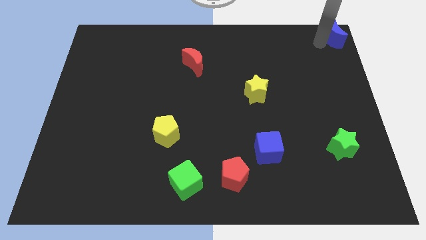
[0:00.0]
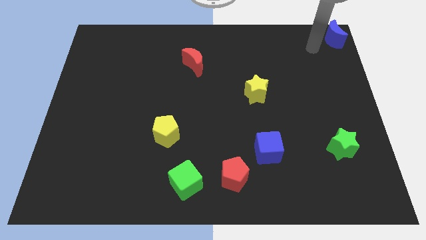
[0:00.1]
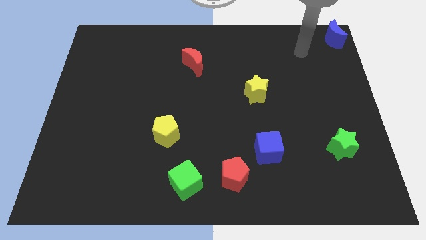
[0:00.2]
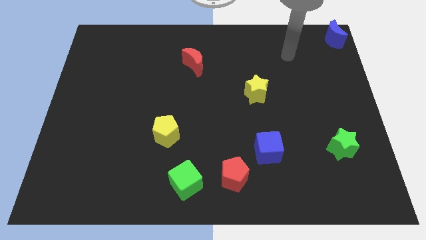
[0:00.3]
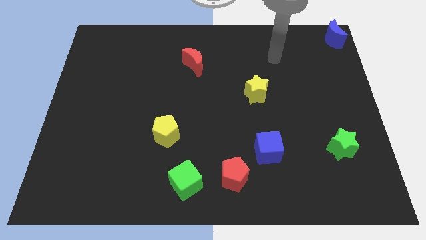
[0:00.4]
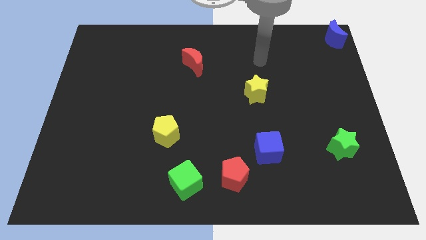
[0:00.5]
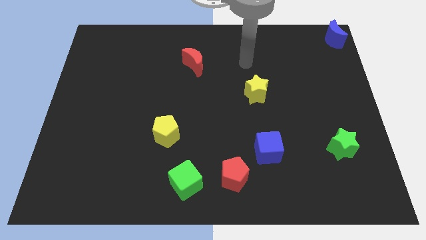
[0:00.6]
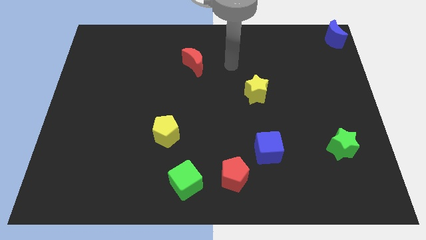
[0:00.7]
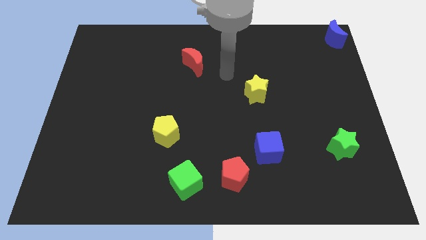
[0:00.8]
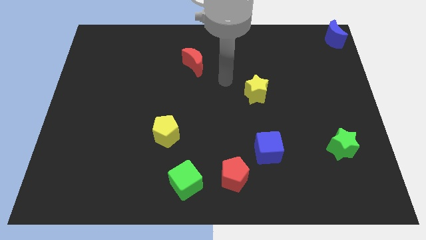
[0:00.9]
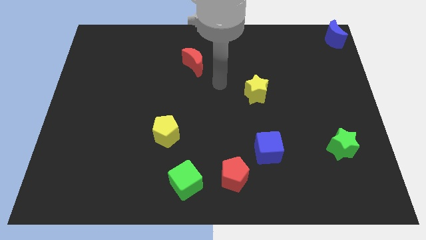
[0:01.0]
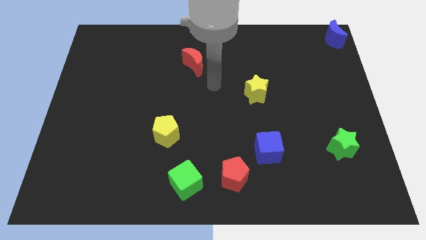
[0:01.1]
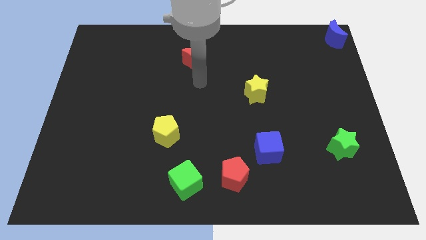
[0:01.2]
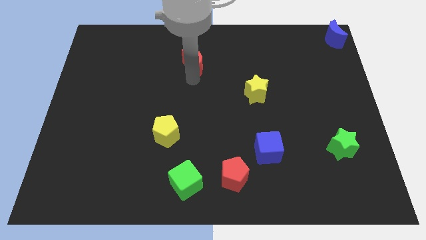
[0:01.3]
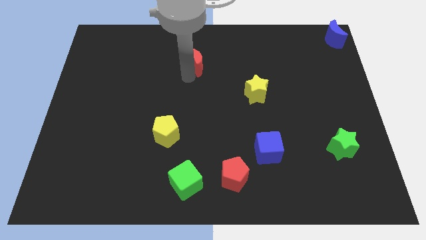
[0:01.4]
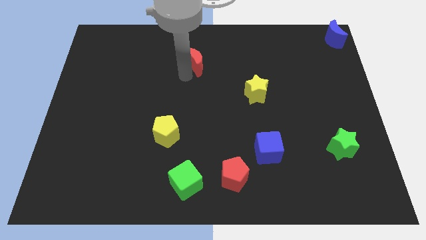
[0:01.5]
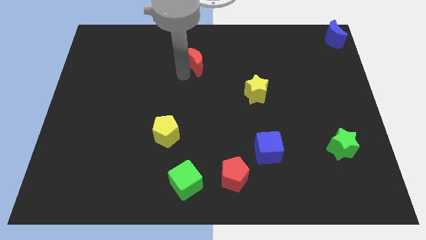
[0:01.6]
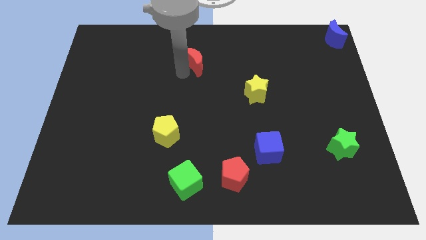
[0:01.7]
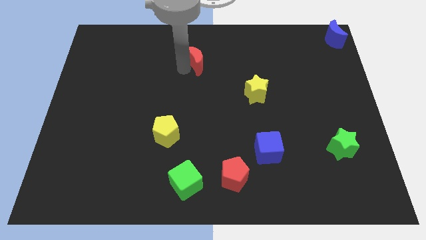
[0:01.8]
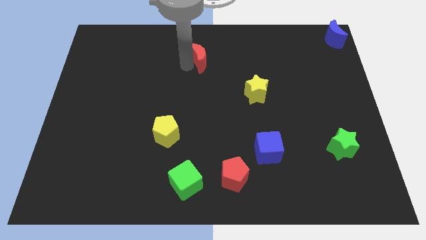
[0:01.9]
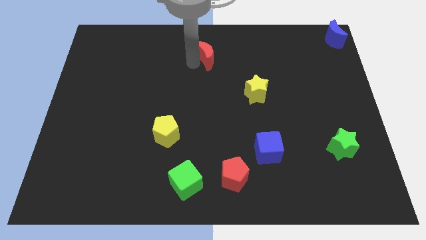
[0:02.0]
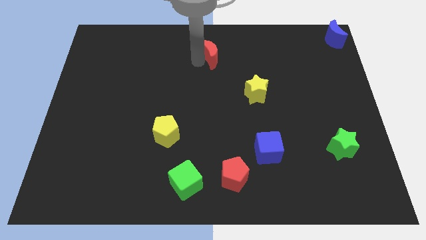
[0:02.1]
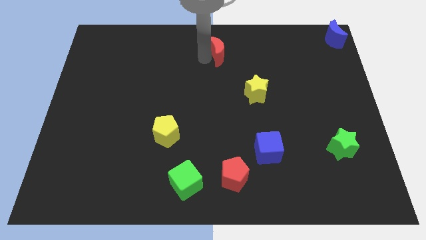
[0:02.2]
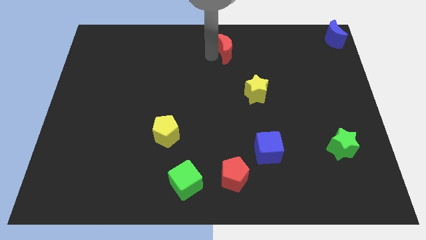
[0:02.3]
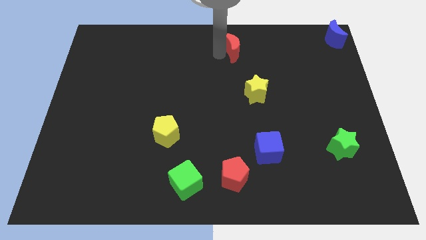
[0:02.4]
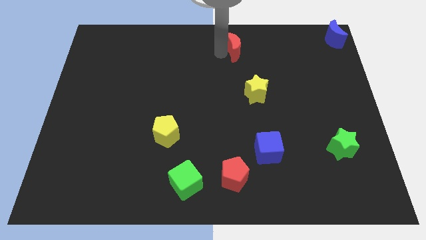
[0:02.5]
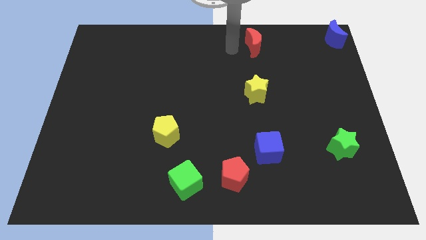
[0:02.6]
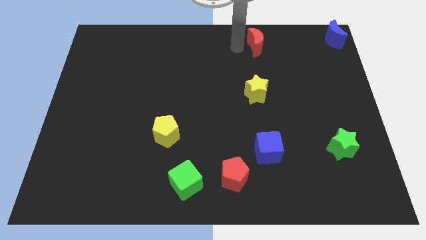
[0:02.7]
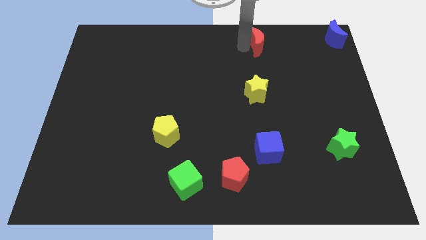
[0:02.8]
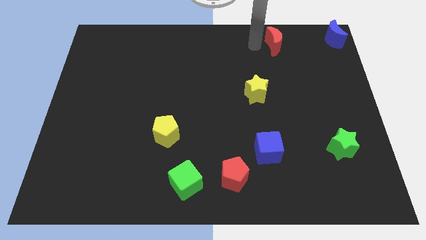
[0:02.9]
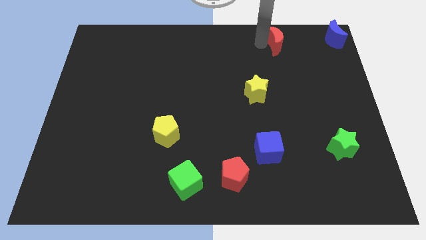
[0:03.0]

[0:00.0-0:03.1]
move the red crescent towards the blue crescent

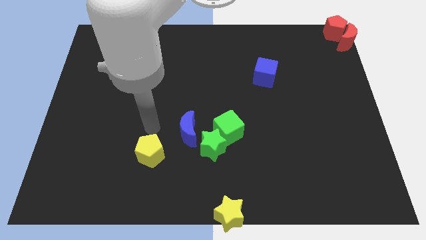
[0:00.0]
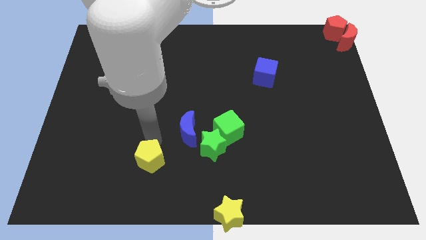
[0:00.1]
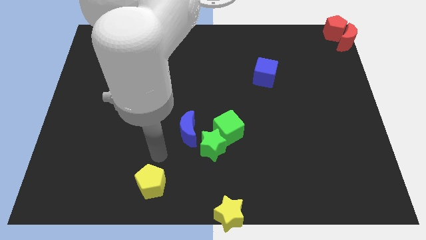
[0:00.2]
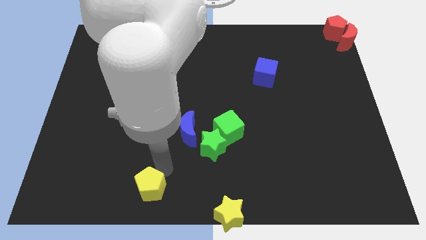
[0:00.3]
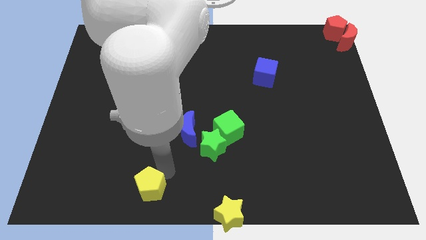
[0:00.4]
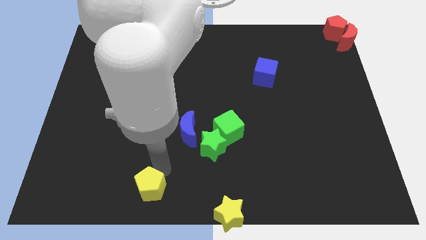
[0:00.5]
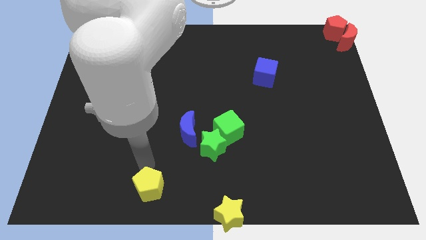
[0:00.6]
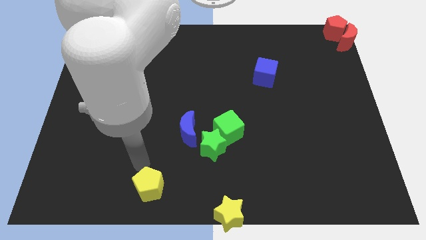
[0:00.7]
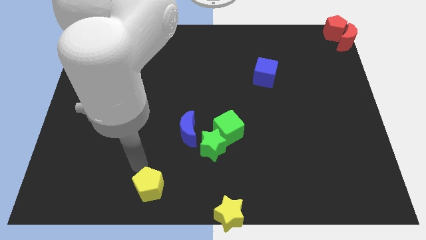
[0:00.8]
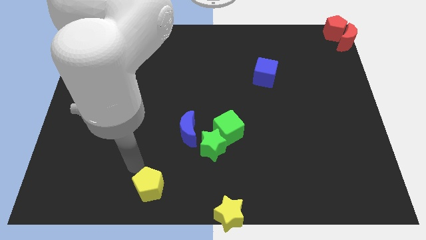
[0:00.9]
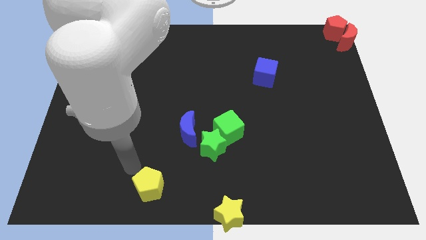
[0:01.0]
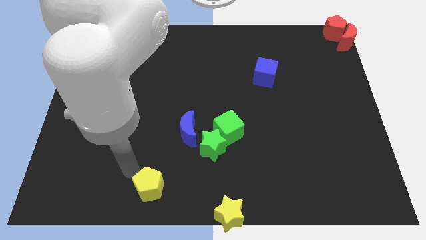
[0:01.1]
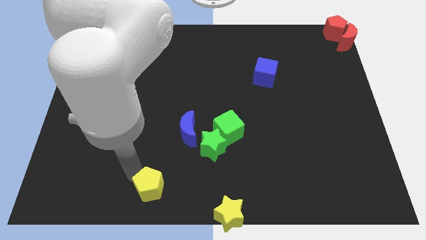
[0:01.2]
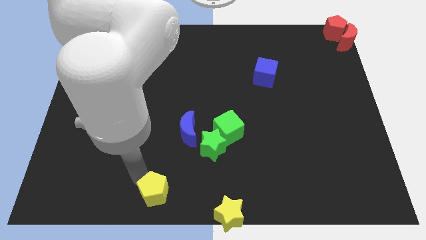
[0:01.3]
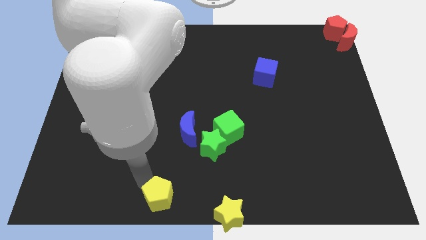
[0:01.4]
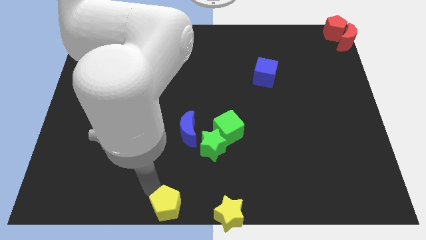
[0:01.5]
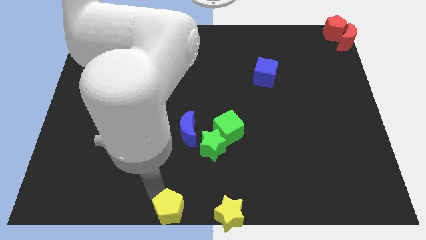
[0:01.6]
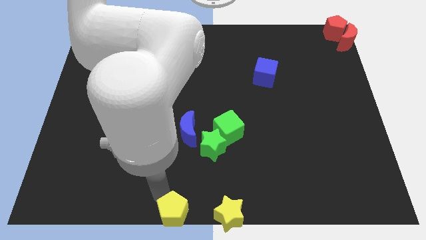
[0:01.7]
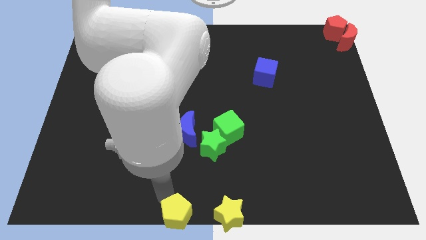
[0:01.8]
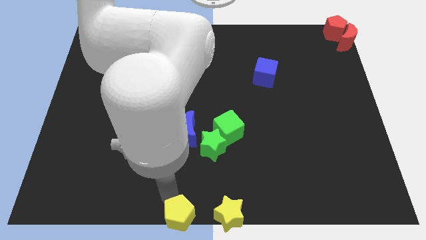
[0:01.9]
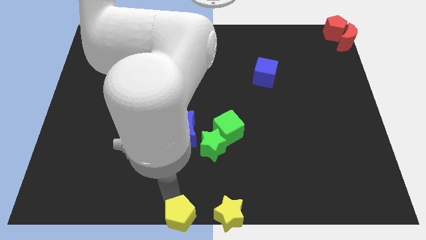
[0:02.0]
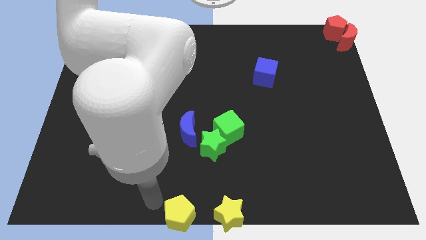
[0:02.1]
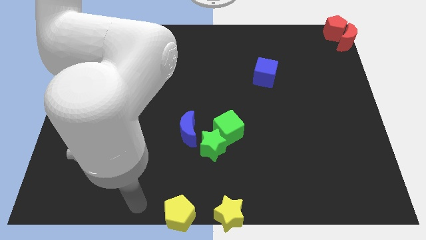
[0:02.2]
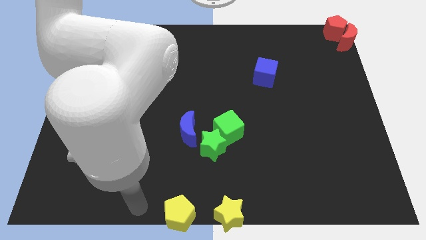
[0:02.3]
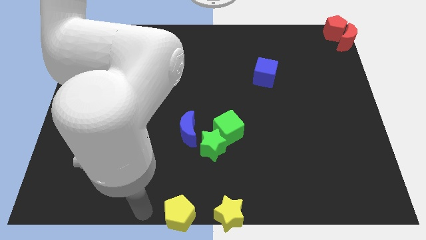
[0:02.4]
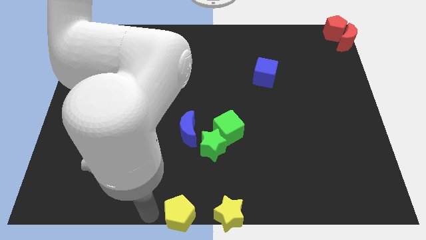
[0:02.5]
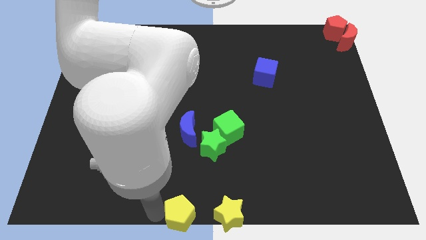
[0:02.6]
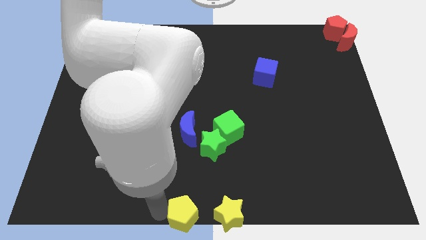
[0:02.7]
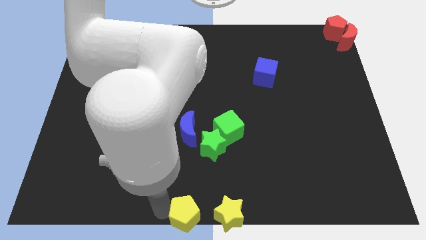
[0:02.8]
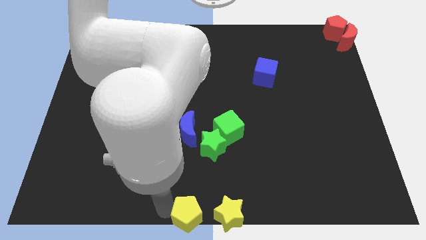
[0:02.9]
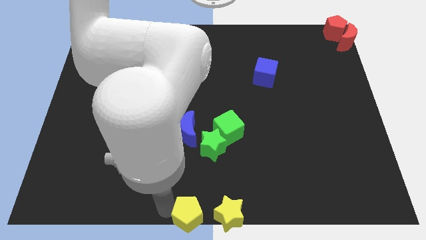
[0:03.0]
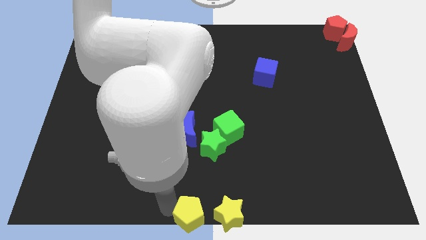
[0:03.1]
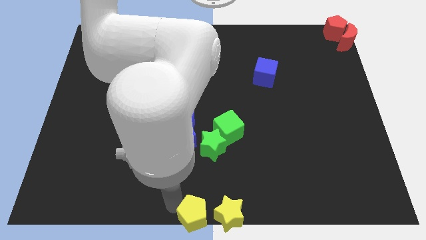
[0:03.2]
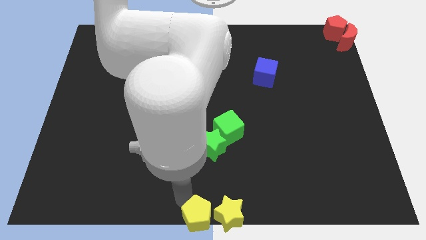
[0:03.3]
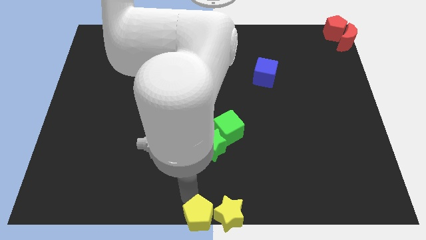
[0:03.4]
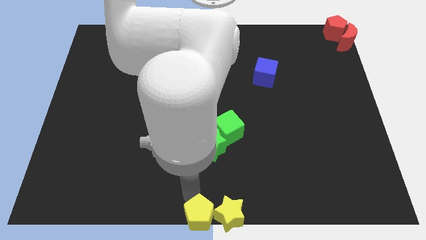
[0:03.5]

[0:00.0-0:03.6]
put the yellow pentagon parallel left to the yellow star

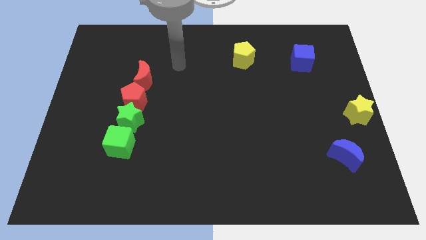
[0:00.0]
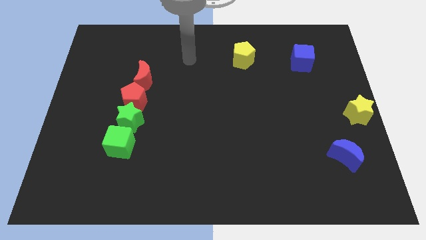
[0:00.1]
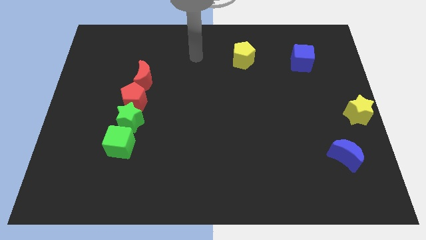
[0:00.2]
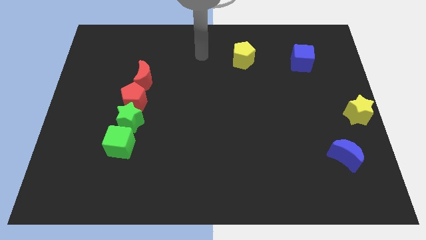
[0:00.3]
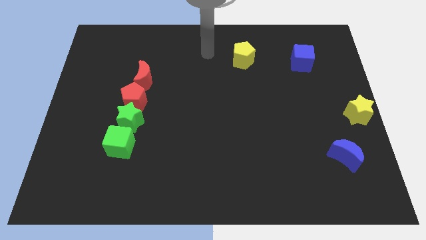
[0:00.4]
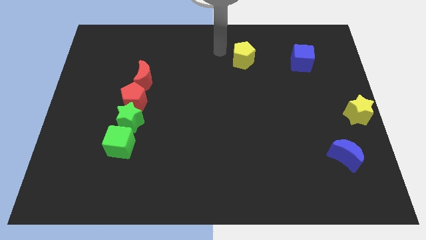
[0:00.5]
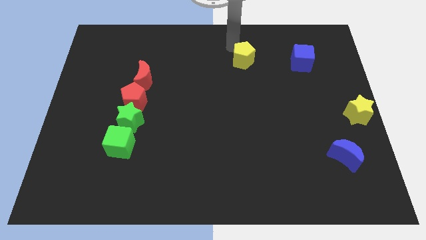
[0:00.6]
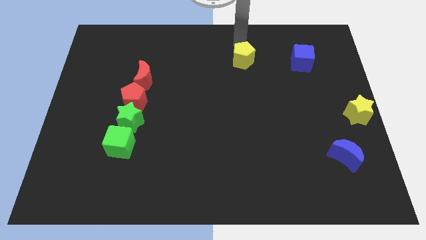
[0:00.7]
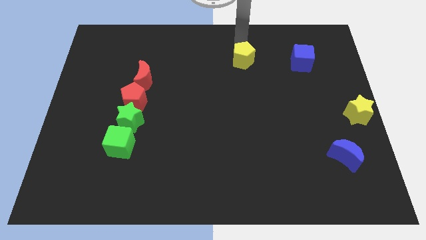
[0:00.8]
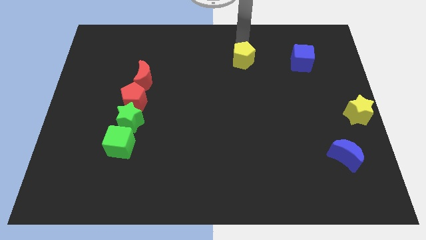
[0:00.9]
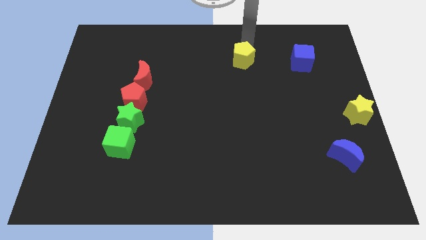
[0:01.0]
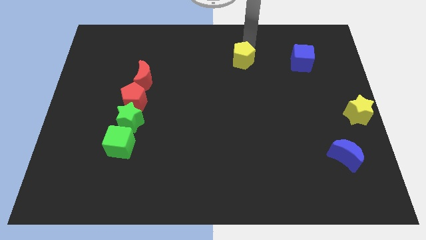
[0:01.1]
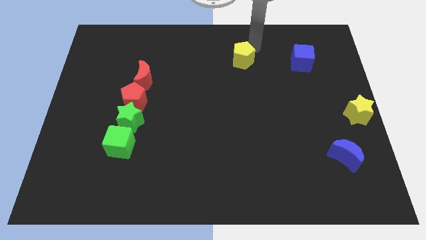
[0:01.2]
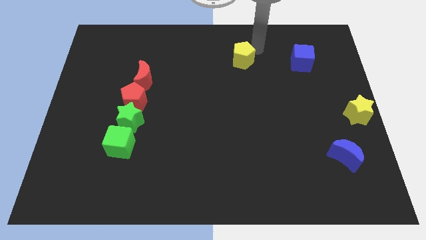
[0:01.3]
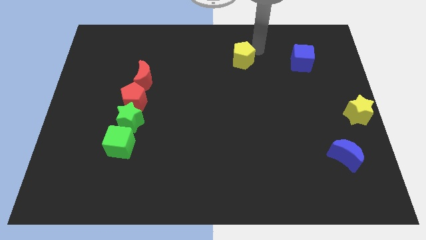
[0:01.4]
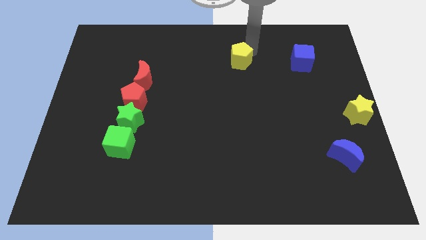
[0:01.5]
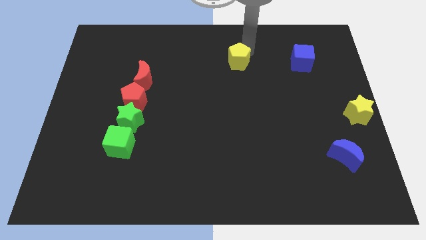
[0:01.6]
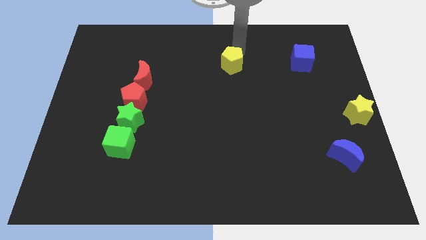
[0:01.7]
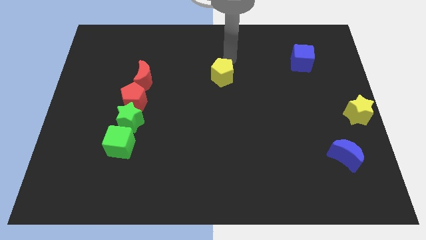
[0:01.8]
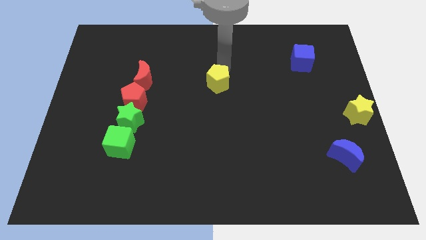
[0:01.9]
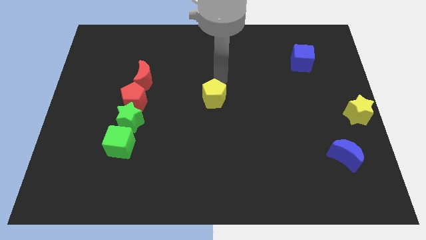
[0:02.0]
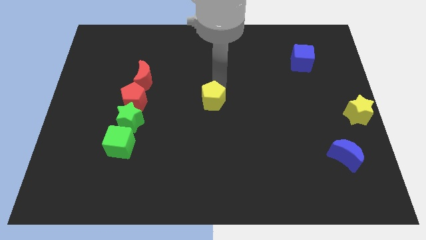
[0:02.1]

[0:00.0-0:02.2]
push the yellow pentagon to the center of the board
